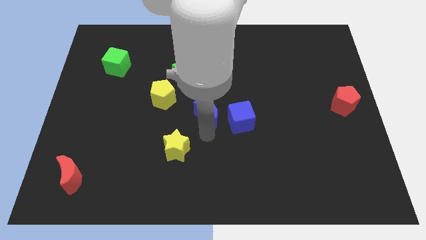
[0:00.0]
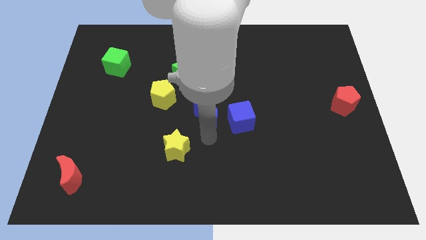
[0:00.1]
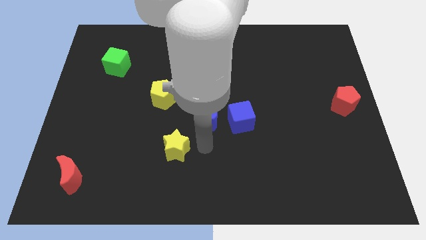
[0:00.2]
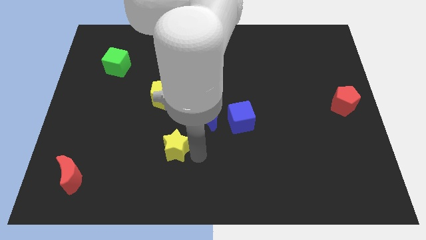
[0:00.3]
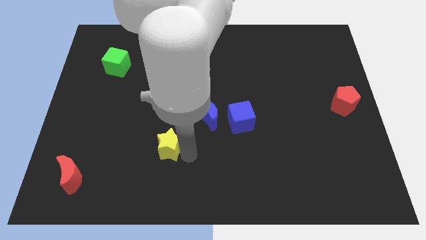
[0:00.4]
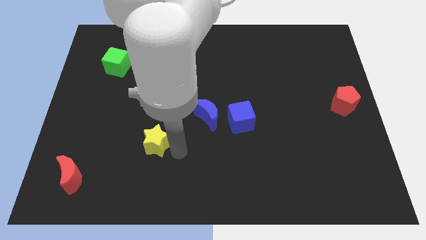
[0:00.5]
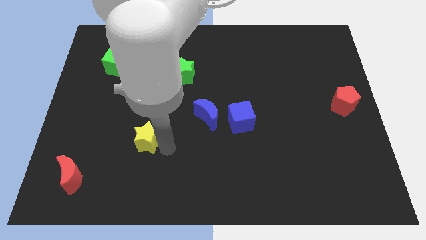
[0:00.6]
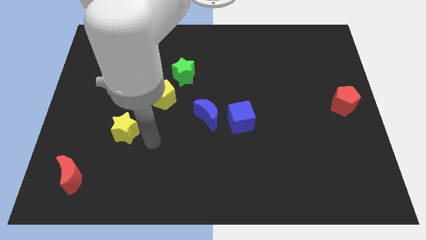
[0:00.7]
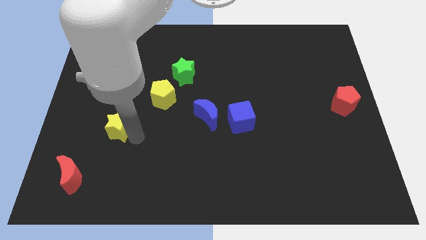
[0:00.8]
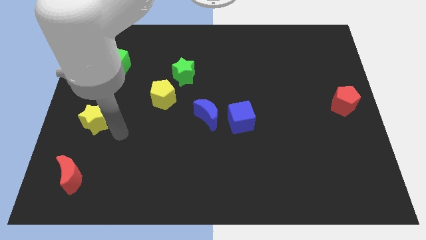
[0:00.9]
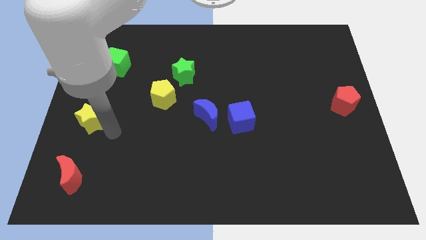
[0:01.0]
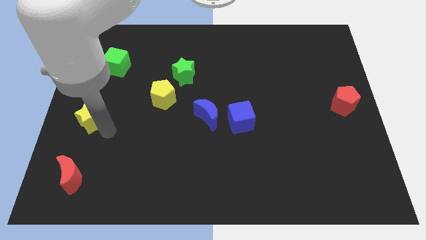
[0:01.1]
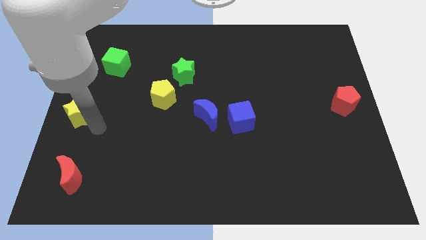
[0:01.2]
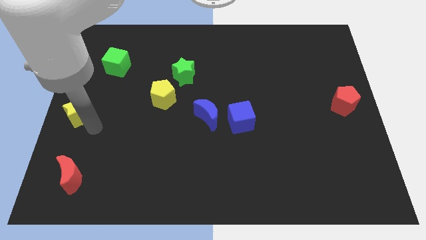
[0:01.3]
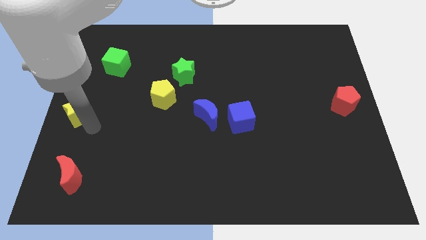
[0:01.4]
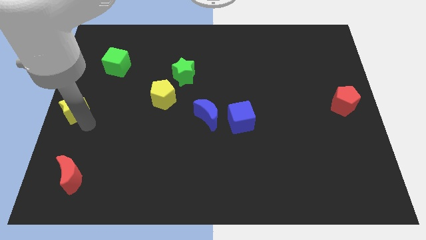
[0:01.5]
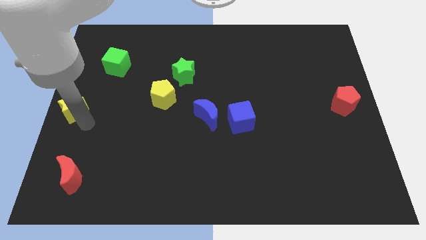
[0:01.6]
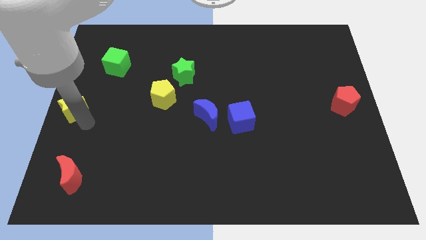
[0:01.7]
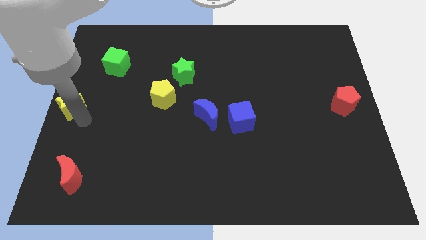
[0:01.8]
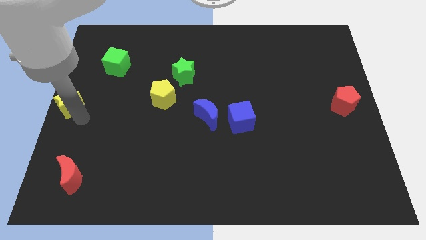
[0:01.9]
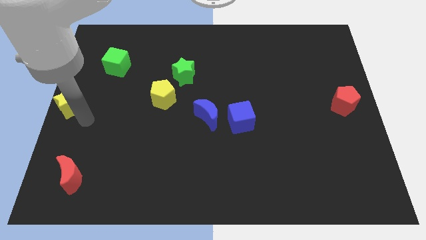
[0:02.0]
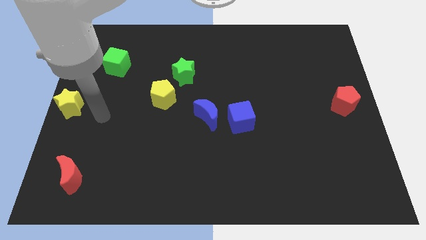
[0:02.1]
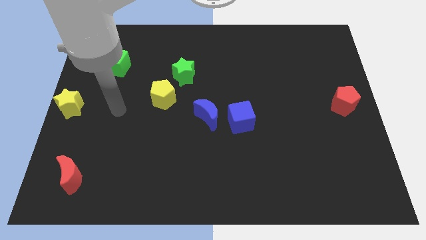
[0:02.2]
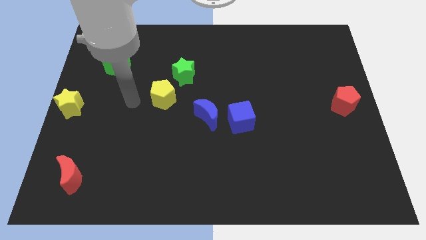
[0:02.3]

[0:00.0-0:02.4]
put the yellow star to the center left side of the board

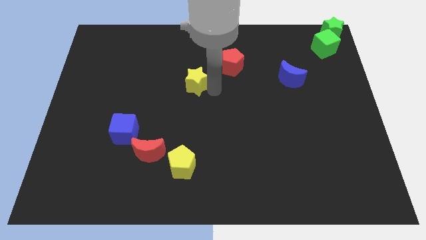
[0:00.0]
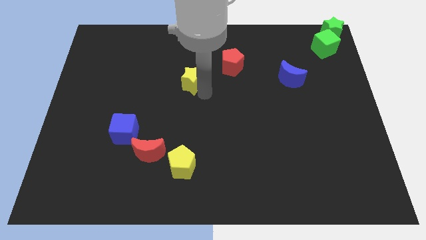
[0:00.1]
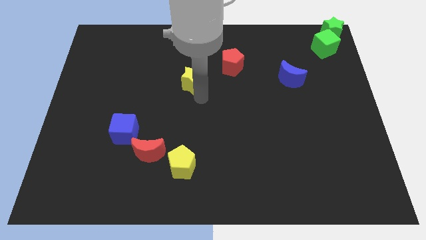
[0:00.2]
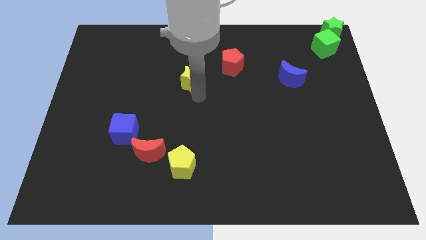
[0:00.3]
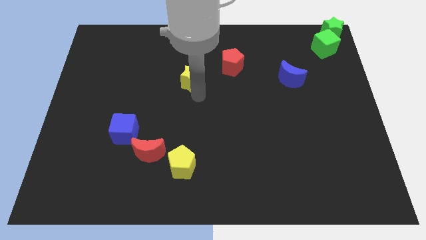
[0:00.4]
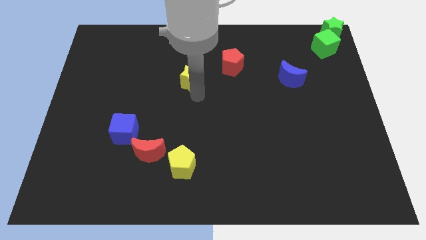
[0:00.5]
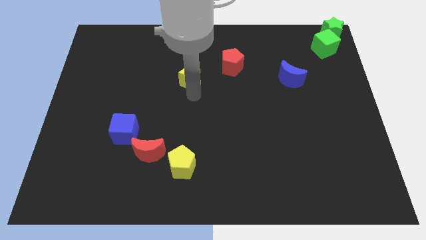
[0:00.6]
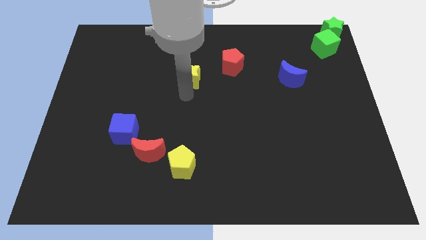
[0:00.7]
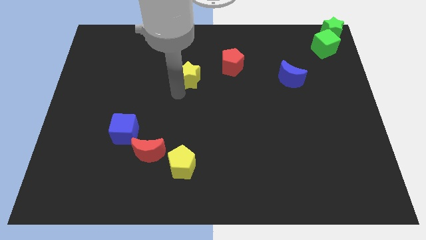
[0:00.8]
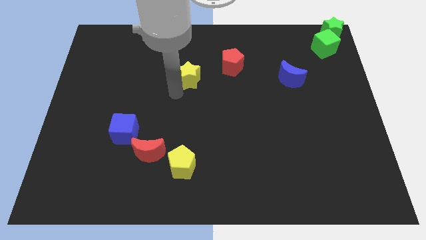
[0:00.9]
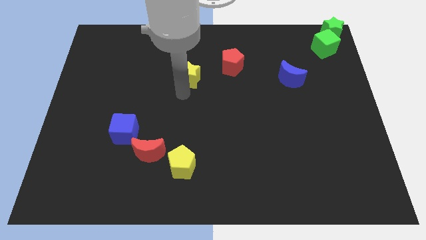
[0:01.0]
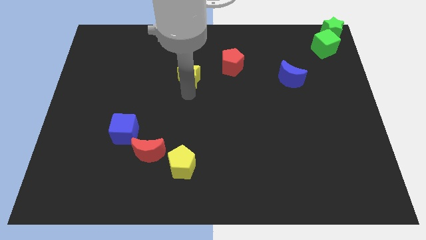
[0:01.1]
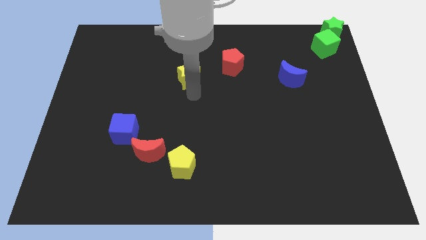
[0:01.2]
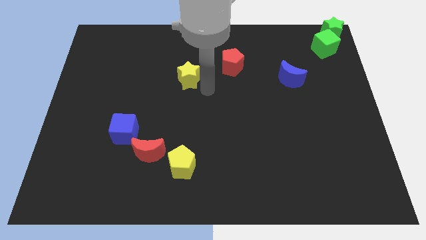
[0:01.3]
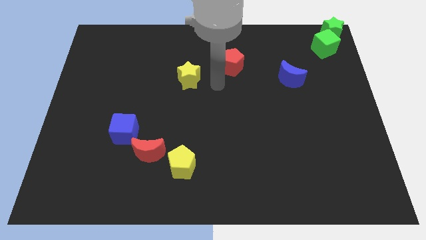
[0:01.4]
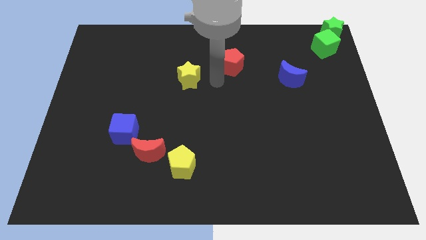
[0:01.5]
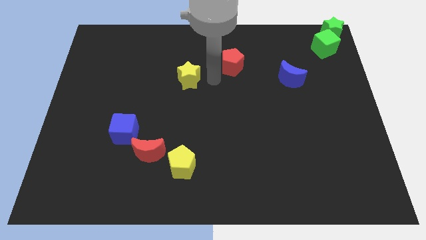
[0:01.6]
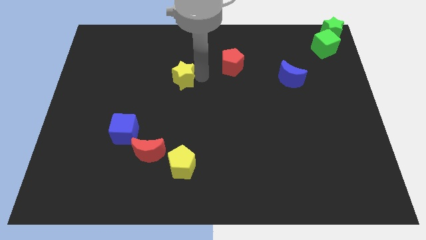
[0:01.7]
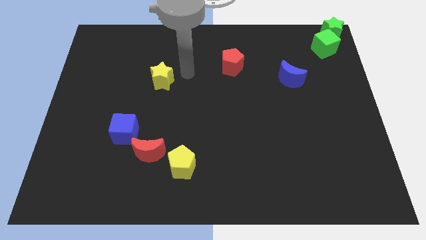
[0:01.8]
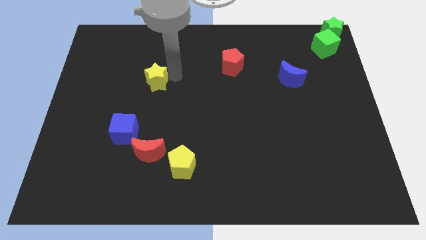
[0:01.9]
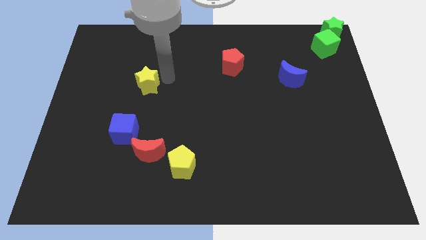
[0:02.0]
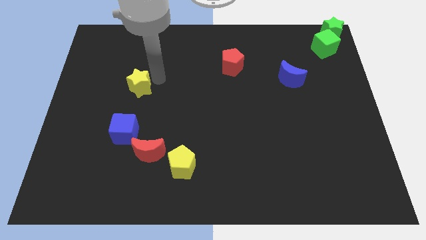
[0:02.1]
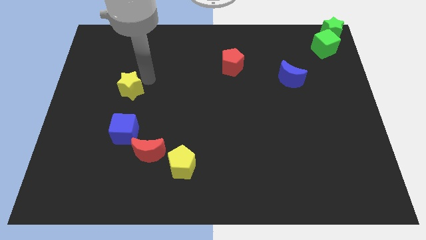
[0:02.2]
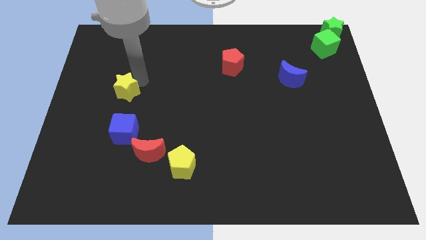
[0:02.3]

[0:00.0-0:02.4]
place the yellow star at the top of blue cube

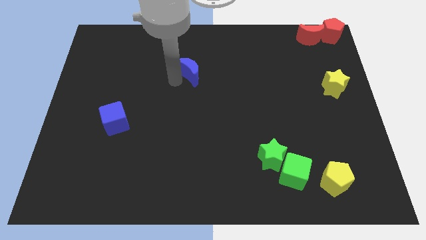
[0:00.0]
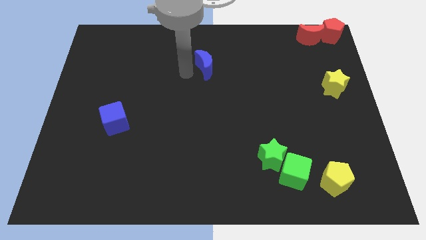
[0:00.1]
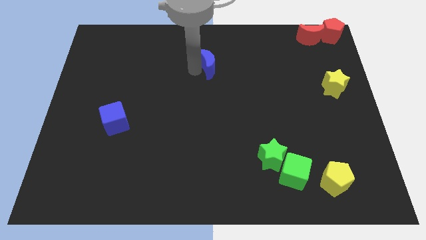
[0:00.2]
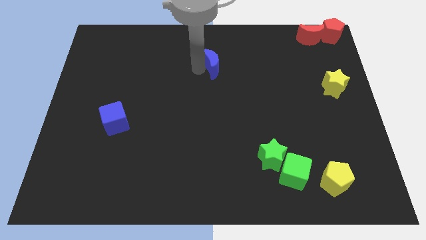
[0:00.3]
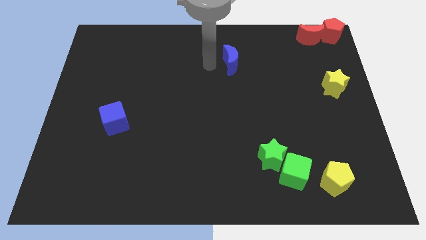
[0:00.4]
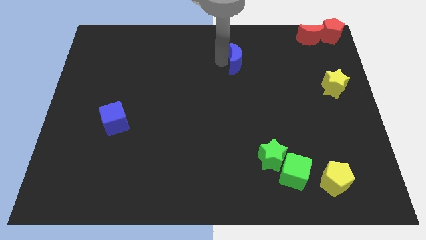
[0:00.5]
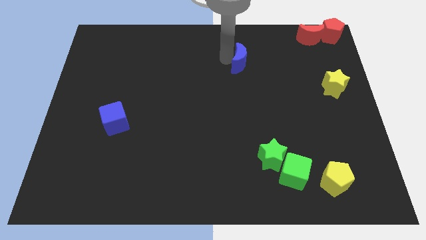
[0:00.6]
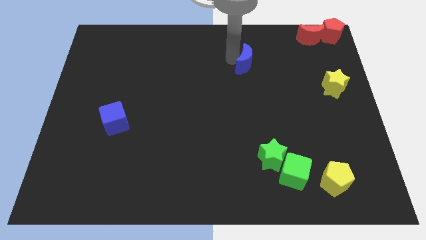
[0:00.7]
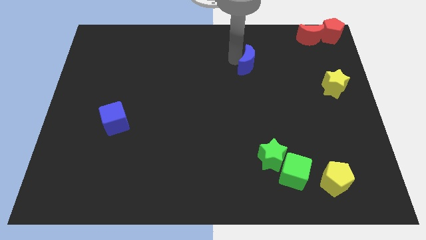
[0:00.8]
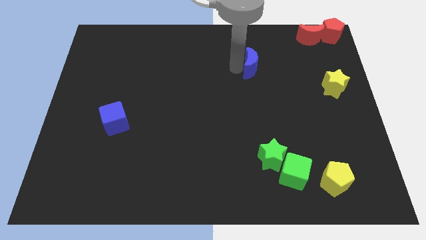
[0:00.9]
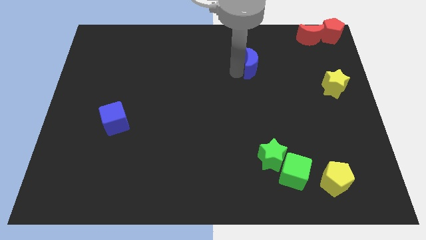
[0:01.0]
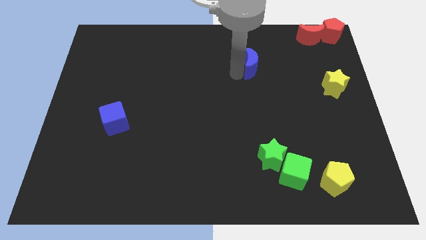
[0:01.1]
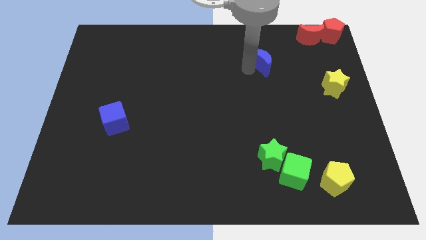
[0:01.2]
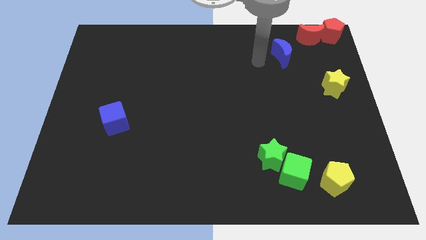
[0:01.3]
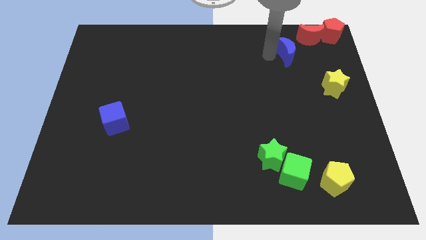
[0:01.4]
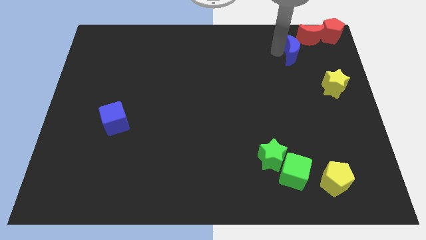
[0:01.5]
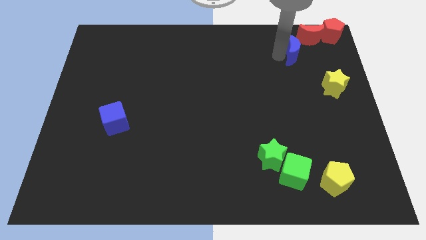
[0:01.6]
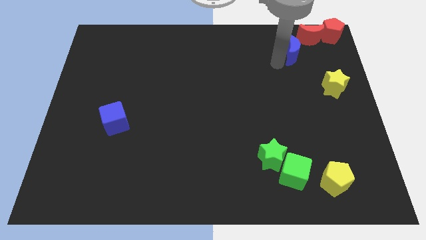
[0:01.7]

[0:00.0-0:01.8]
place blue moon to the bottom left of red moon

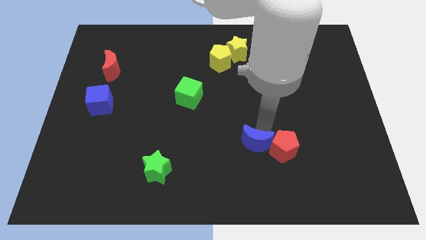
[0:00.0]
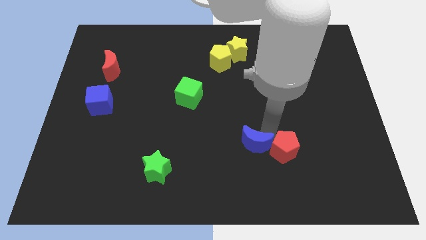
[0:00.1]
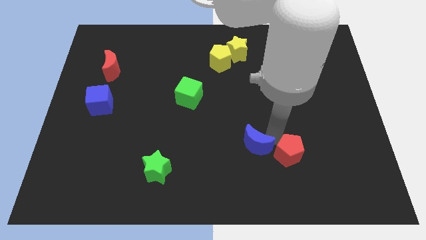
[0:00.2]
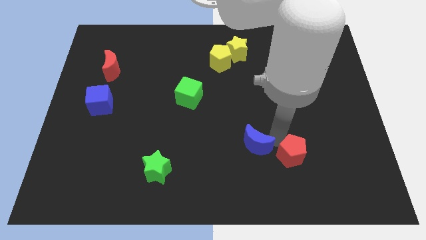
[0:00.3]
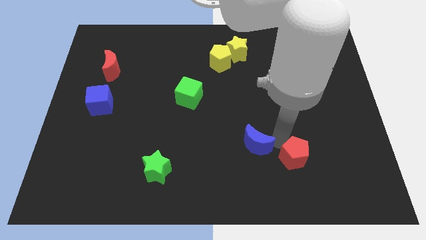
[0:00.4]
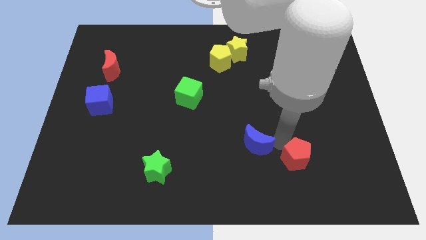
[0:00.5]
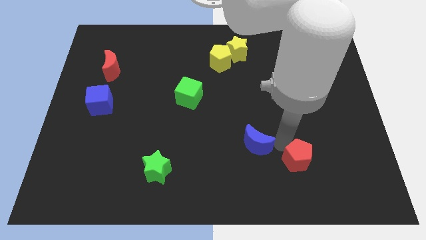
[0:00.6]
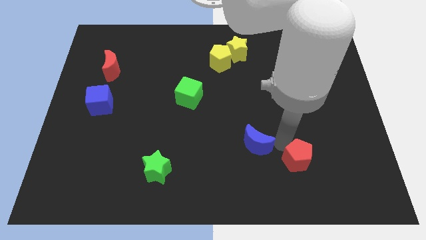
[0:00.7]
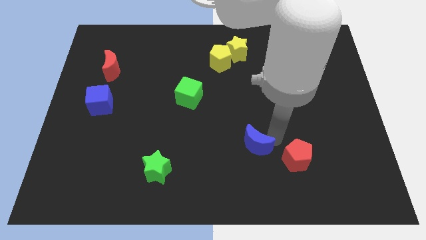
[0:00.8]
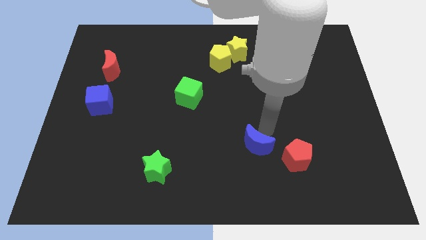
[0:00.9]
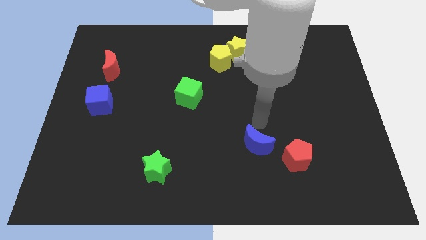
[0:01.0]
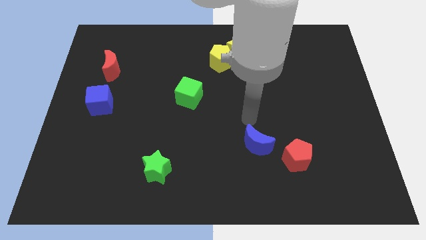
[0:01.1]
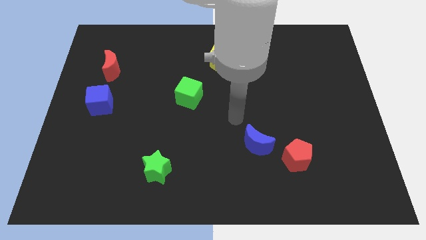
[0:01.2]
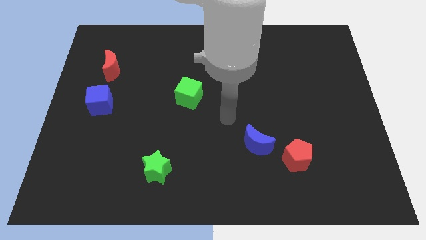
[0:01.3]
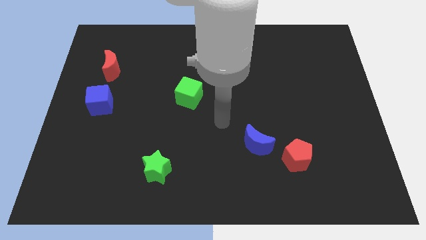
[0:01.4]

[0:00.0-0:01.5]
separate red pentagon from blue moon

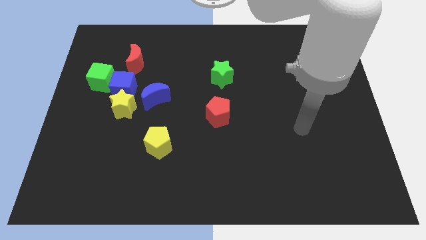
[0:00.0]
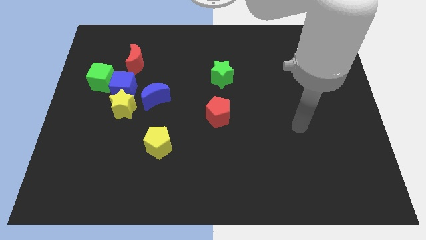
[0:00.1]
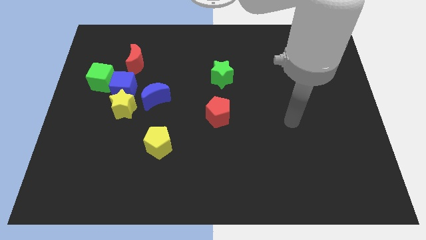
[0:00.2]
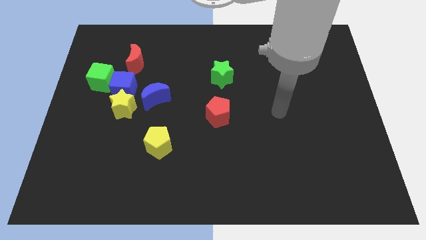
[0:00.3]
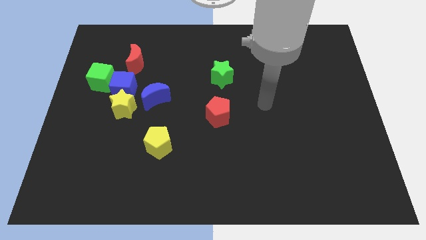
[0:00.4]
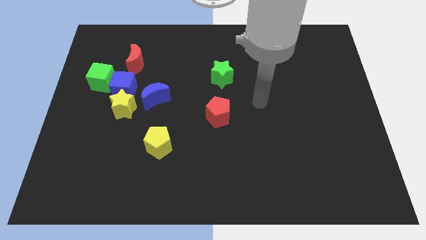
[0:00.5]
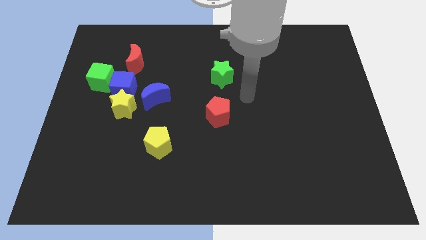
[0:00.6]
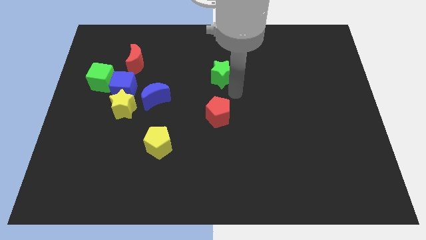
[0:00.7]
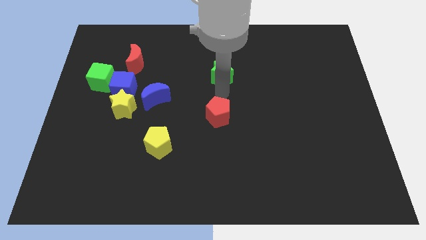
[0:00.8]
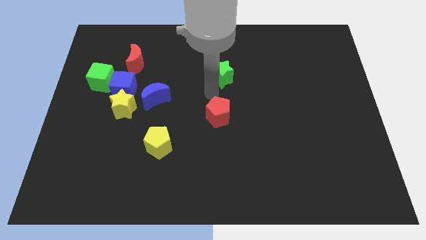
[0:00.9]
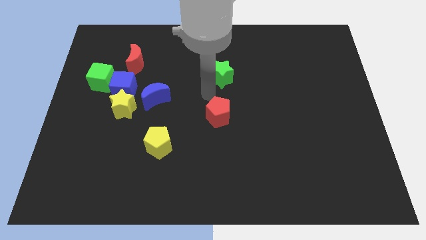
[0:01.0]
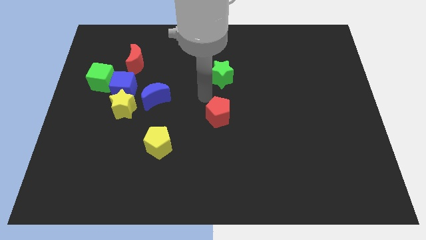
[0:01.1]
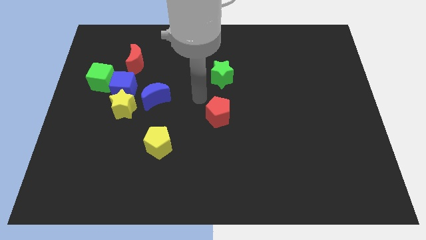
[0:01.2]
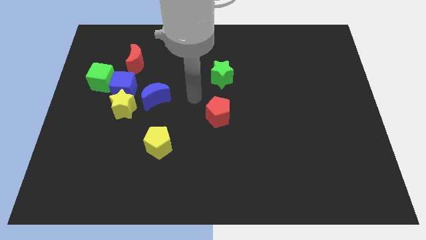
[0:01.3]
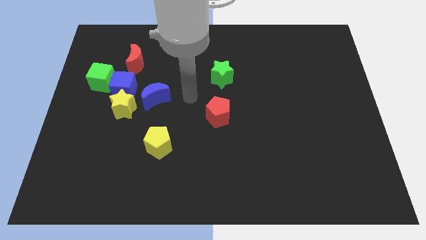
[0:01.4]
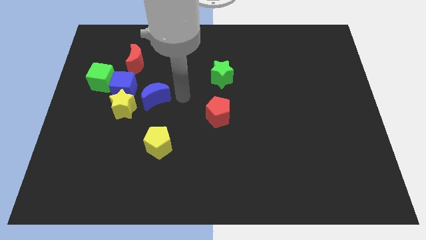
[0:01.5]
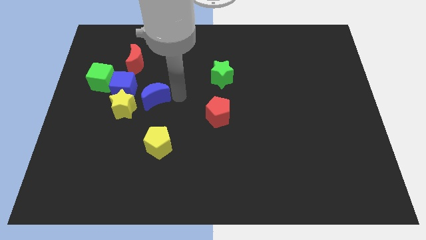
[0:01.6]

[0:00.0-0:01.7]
move your arm close to the blue moon
